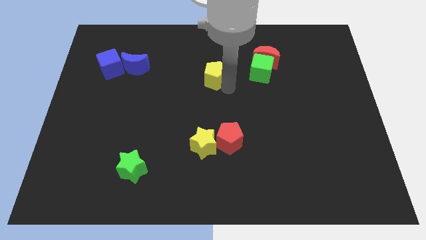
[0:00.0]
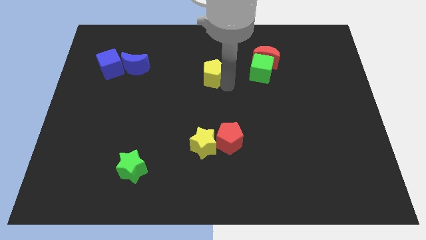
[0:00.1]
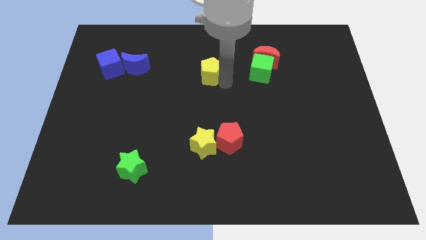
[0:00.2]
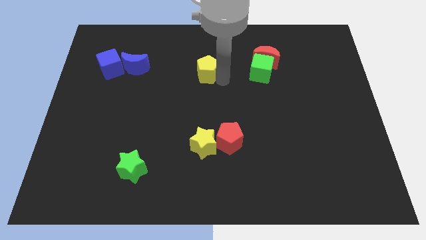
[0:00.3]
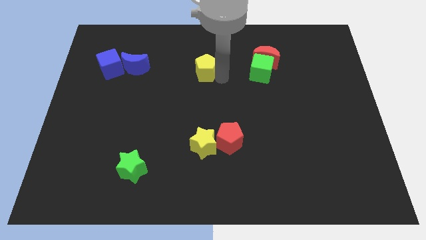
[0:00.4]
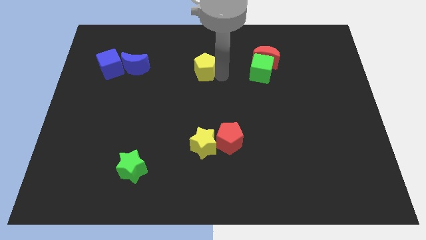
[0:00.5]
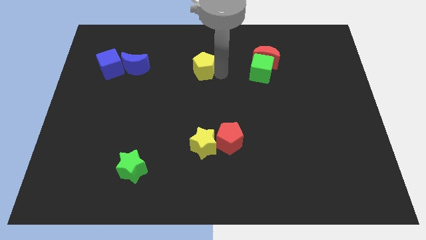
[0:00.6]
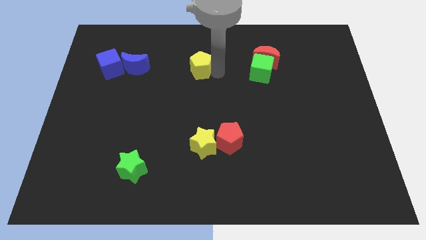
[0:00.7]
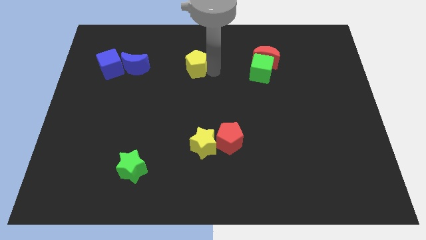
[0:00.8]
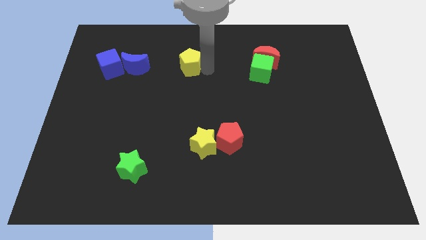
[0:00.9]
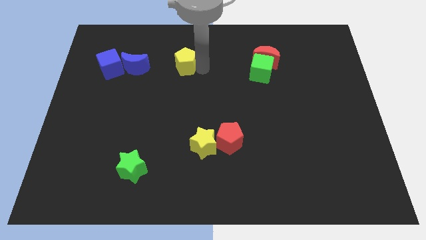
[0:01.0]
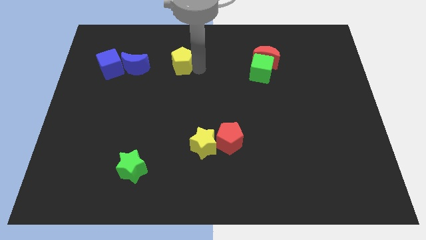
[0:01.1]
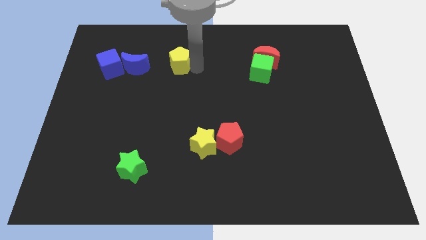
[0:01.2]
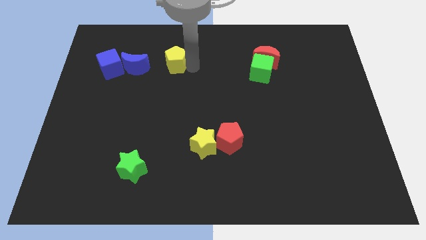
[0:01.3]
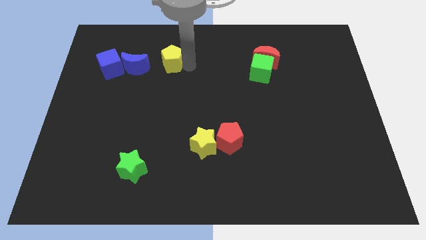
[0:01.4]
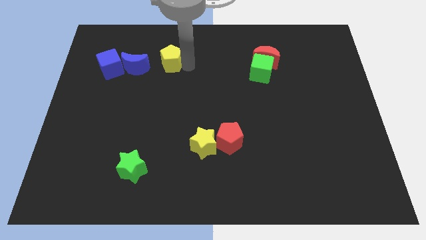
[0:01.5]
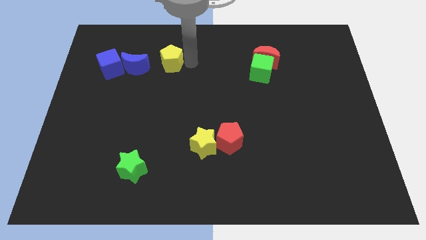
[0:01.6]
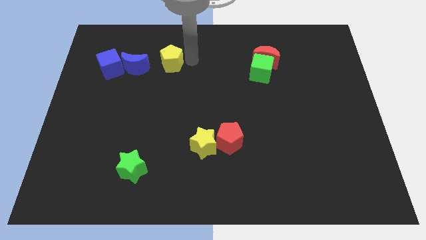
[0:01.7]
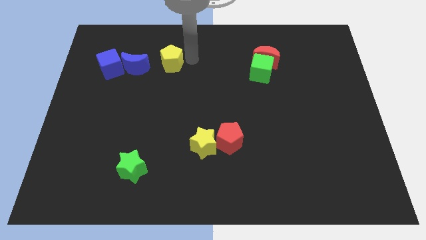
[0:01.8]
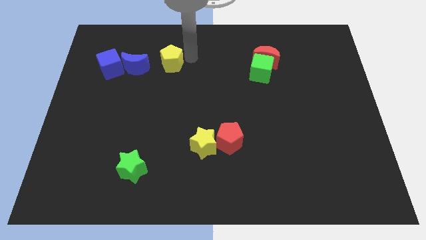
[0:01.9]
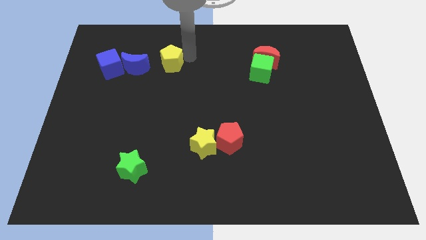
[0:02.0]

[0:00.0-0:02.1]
push the yellow pentagon right to the blue crescent

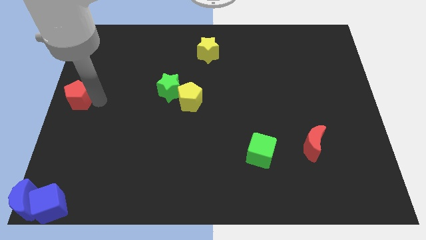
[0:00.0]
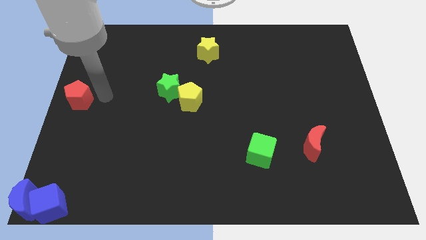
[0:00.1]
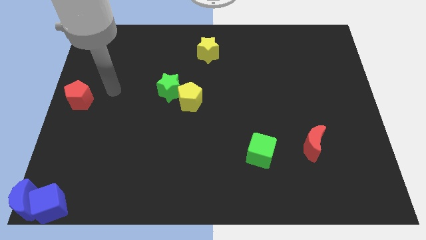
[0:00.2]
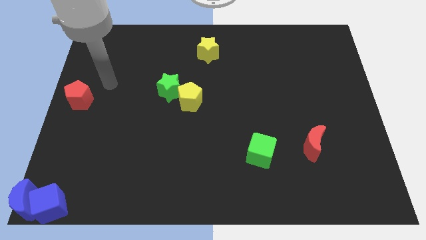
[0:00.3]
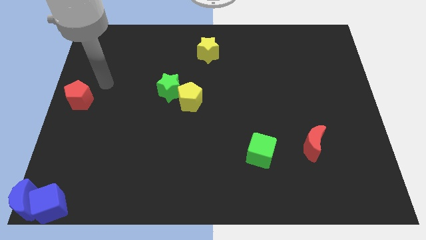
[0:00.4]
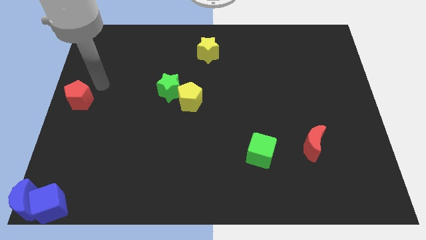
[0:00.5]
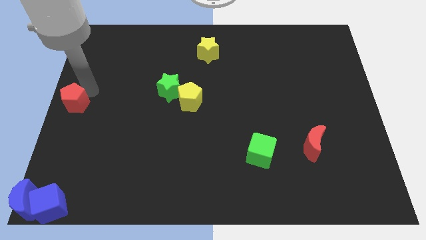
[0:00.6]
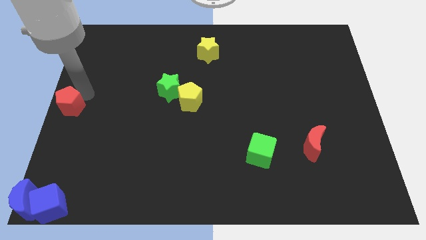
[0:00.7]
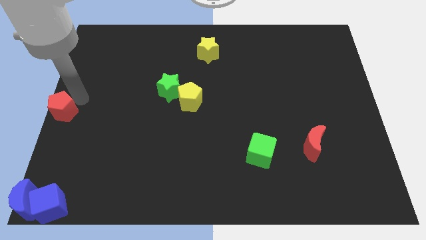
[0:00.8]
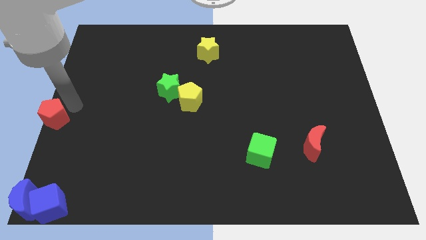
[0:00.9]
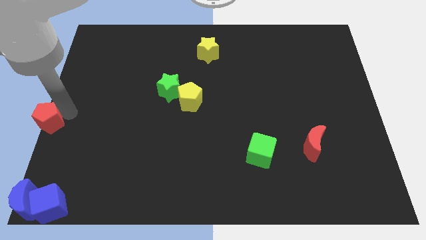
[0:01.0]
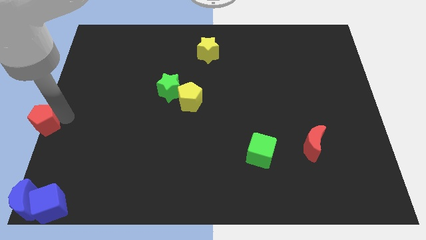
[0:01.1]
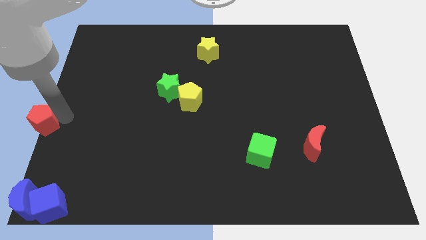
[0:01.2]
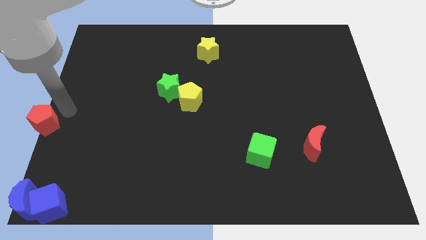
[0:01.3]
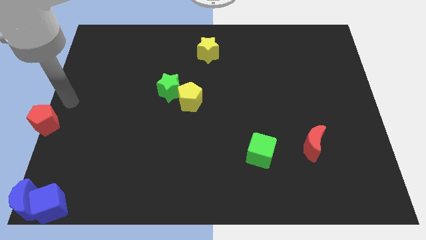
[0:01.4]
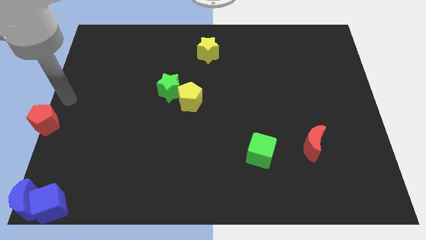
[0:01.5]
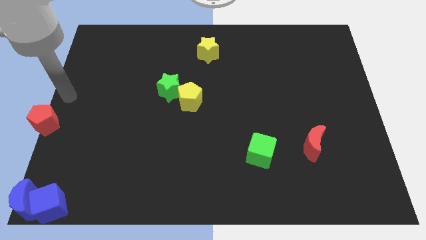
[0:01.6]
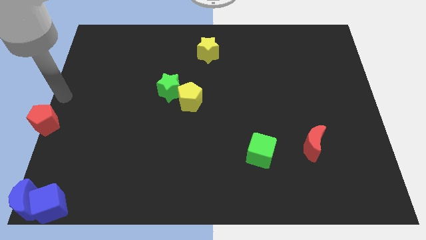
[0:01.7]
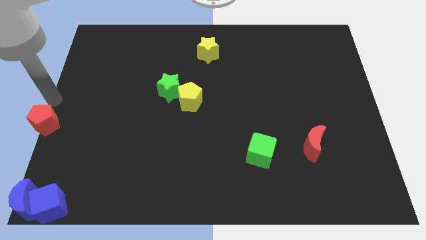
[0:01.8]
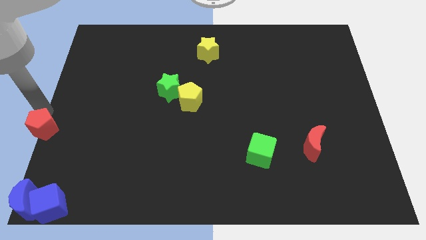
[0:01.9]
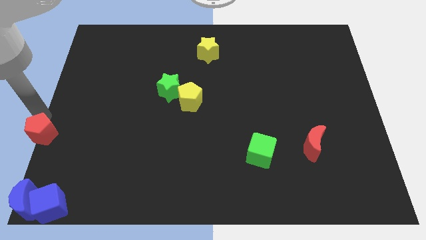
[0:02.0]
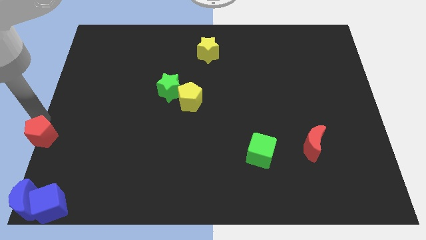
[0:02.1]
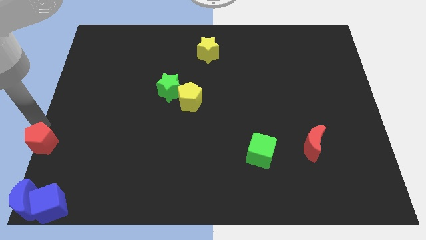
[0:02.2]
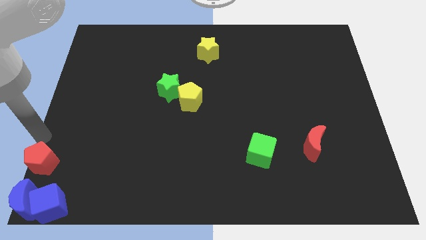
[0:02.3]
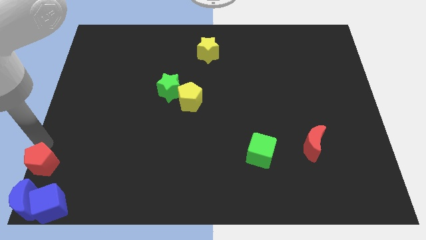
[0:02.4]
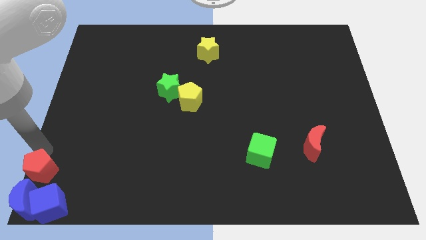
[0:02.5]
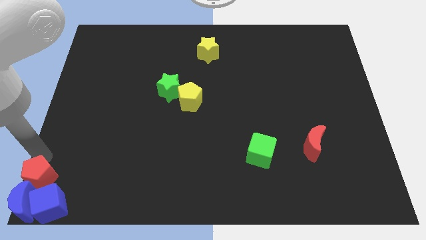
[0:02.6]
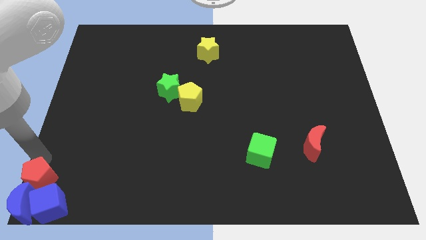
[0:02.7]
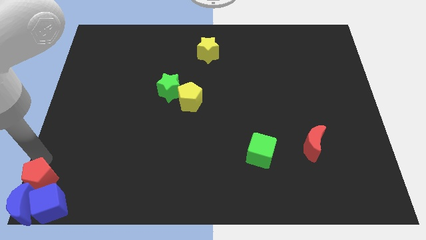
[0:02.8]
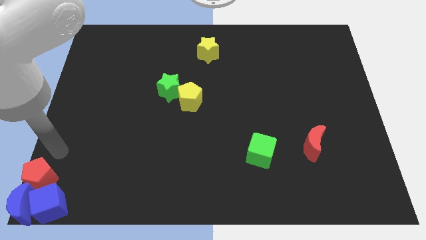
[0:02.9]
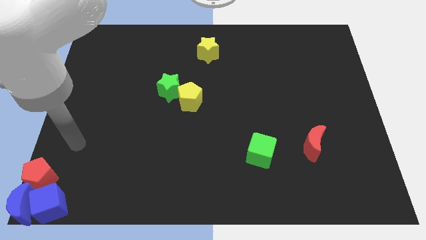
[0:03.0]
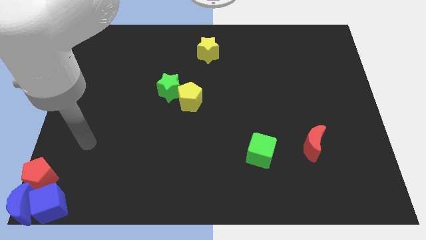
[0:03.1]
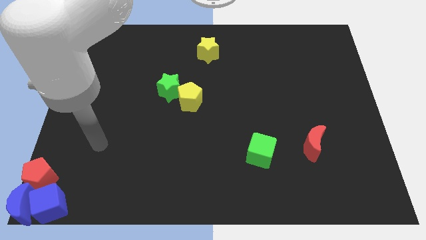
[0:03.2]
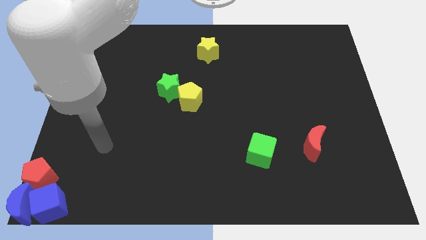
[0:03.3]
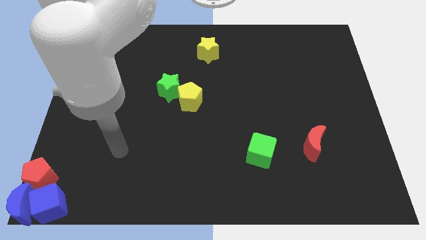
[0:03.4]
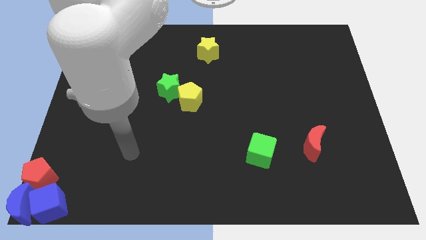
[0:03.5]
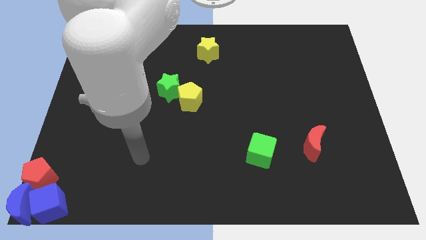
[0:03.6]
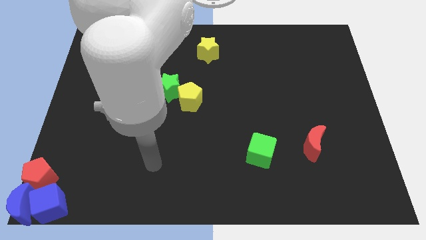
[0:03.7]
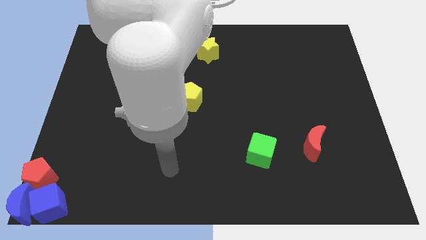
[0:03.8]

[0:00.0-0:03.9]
place the red pentagon above the blue crescent

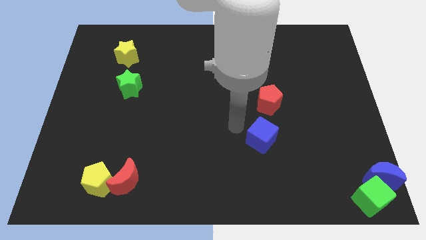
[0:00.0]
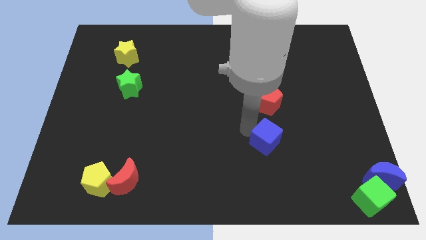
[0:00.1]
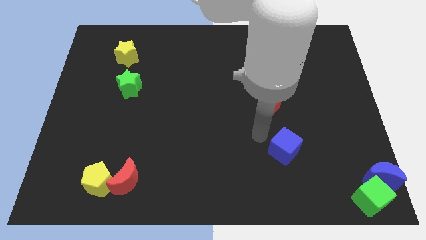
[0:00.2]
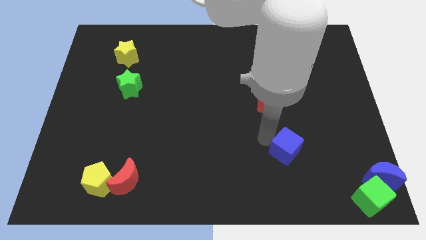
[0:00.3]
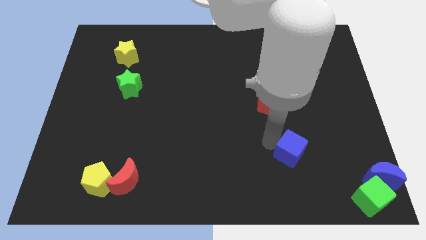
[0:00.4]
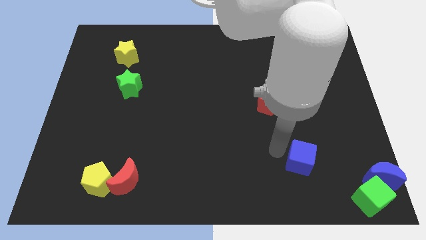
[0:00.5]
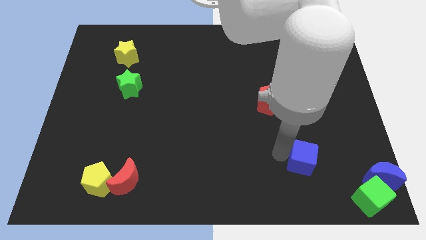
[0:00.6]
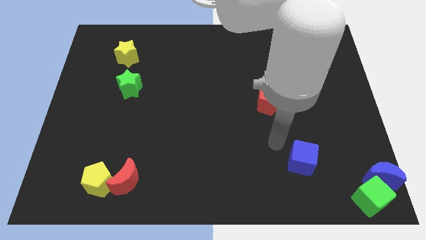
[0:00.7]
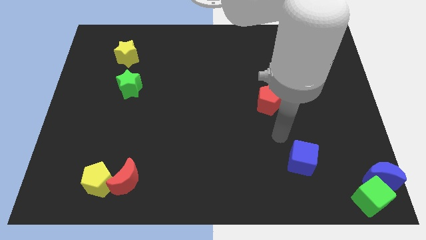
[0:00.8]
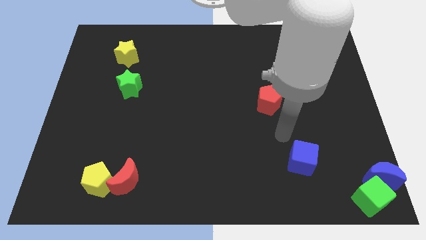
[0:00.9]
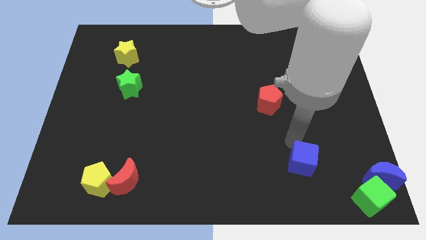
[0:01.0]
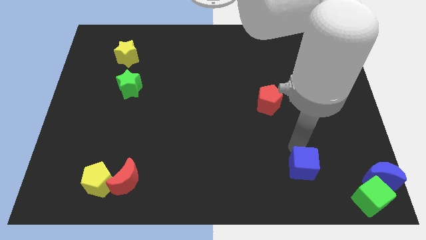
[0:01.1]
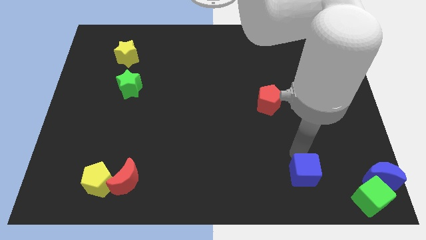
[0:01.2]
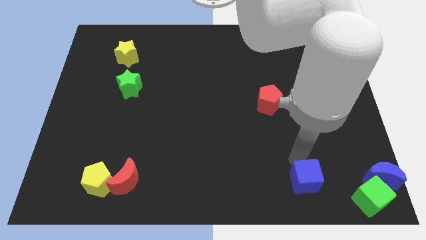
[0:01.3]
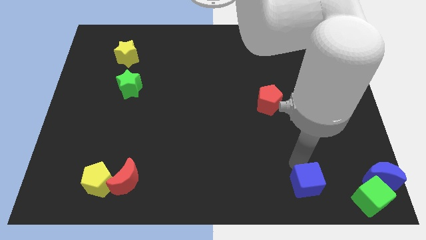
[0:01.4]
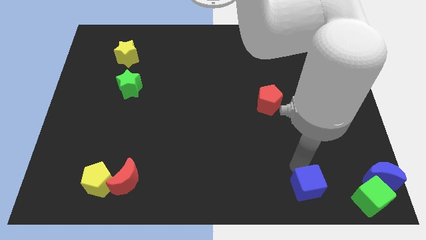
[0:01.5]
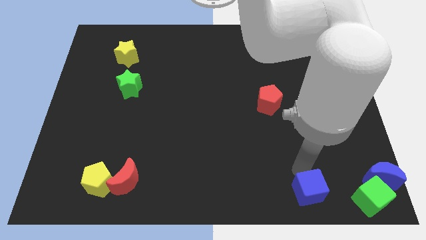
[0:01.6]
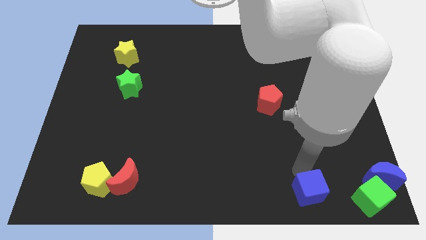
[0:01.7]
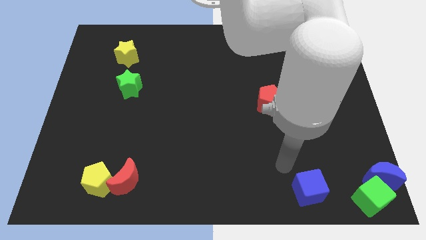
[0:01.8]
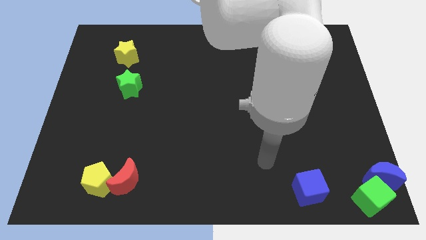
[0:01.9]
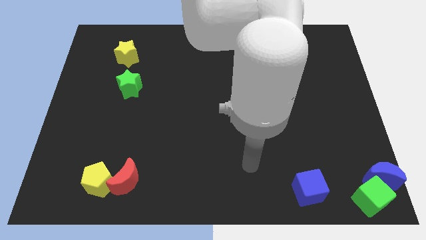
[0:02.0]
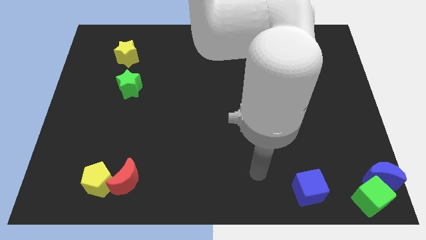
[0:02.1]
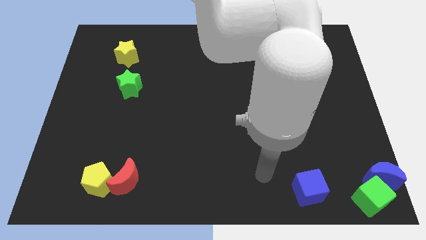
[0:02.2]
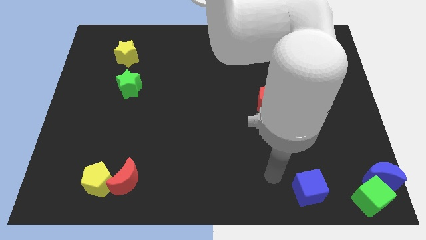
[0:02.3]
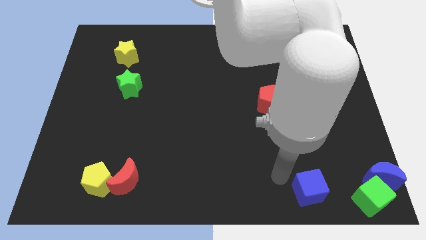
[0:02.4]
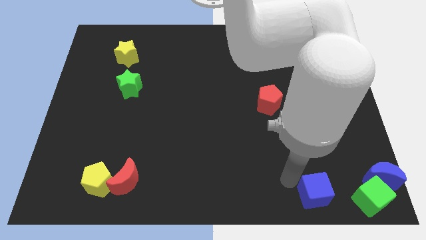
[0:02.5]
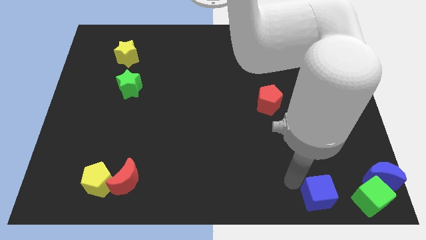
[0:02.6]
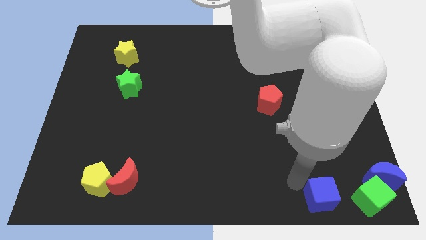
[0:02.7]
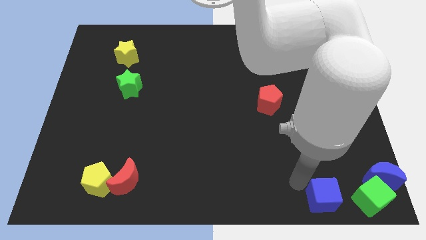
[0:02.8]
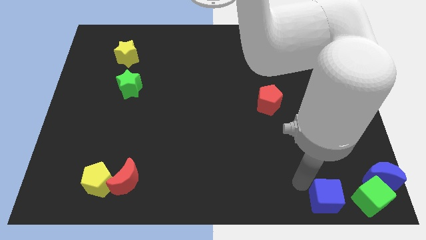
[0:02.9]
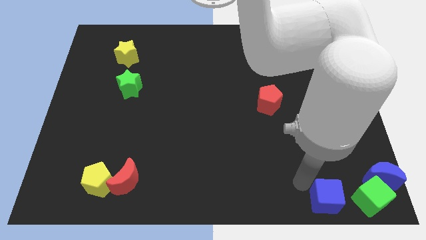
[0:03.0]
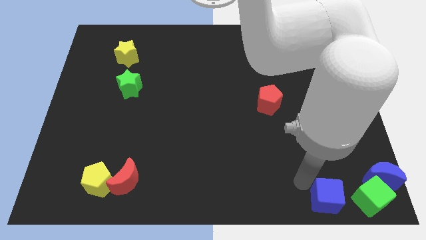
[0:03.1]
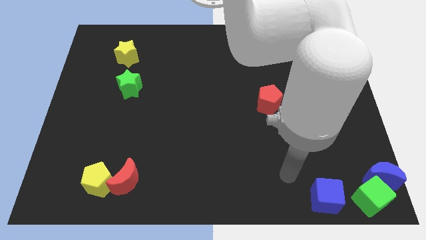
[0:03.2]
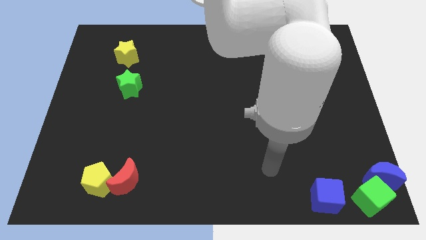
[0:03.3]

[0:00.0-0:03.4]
slide the blue cube to the left side of the green cube
